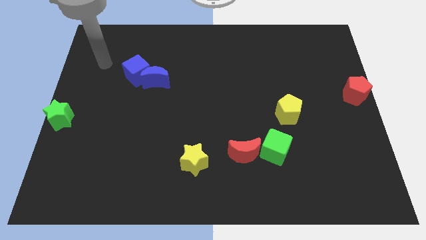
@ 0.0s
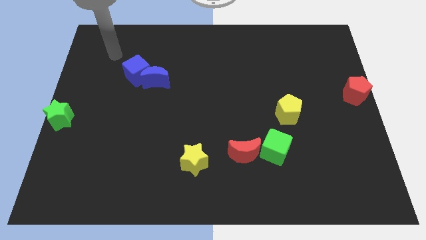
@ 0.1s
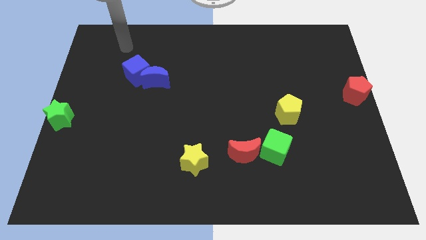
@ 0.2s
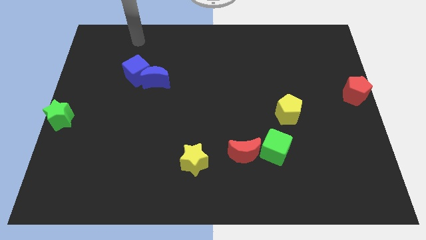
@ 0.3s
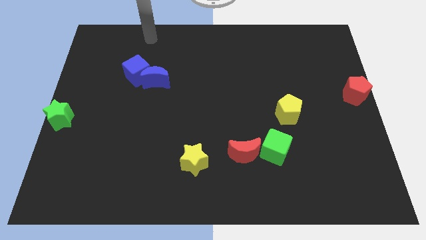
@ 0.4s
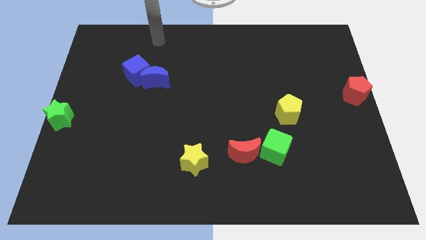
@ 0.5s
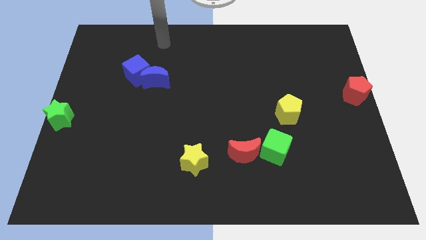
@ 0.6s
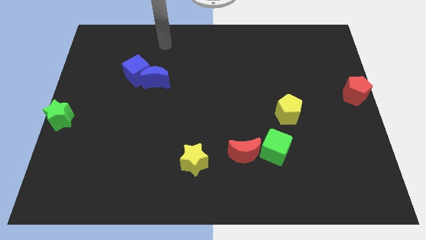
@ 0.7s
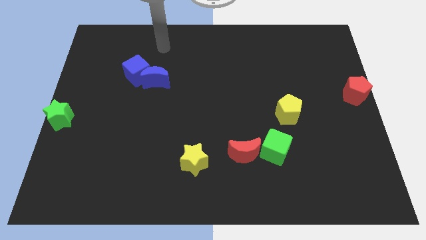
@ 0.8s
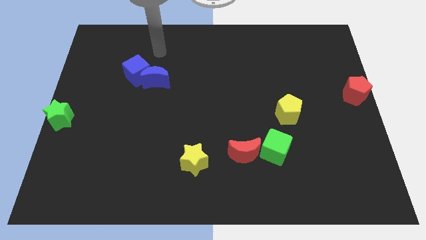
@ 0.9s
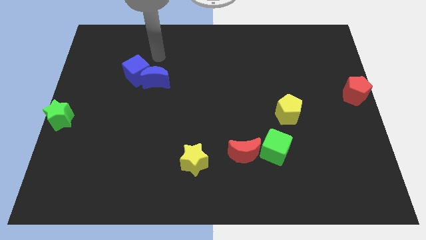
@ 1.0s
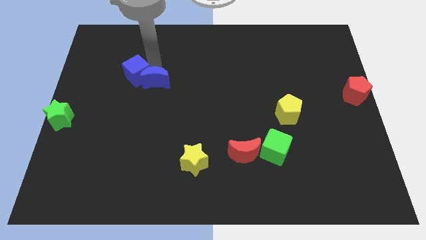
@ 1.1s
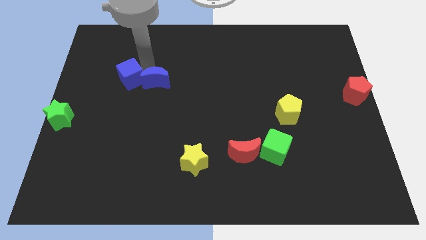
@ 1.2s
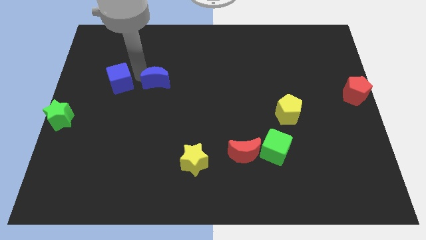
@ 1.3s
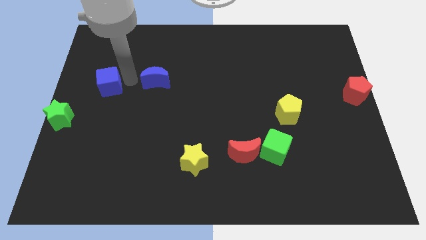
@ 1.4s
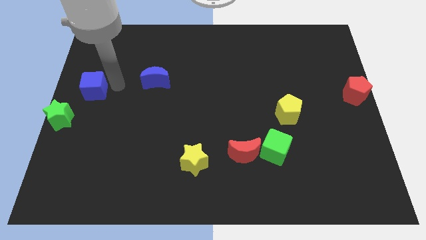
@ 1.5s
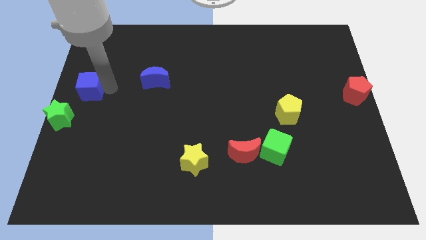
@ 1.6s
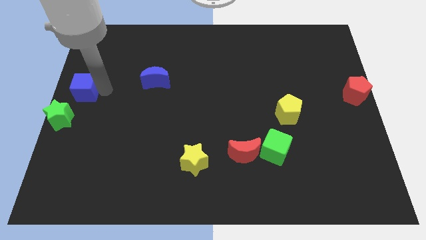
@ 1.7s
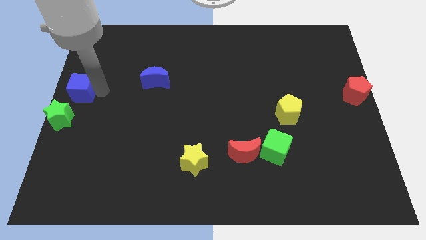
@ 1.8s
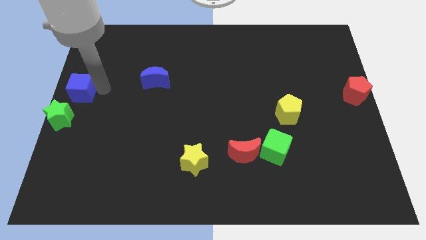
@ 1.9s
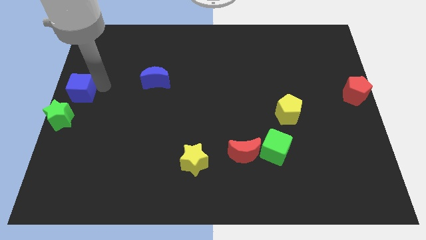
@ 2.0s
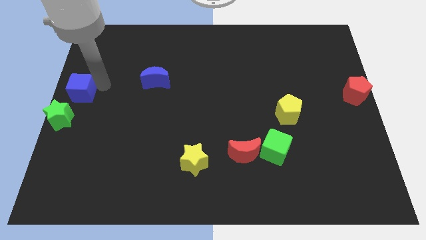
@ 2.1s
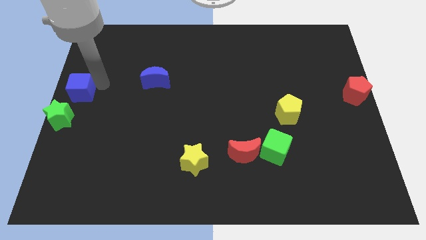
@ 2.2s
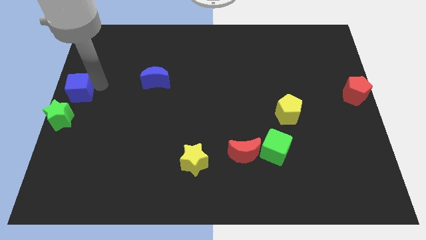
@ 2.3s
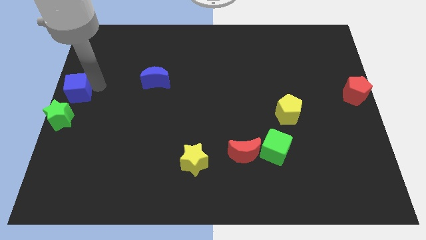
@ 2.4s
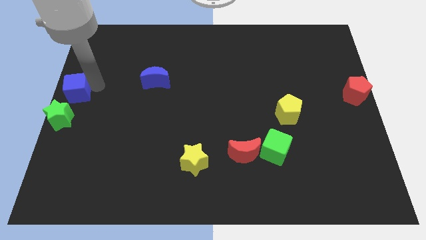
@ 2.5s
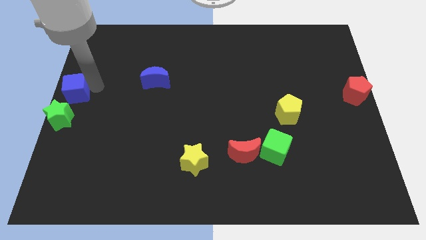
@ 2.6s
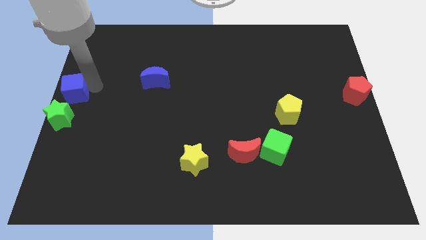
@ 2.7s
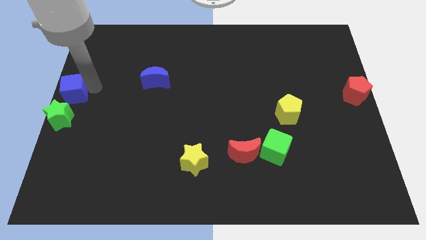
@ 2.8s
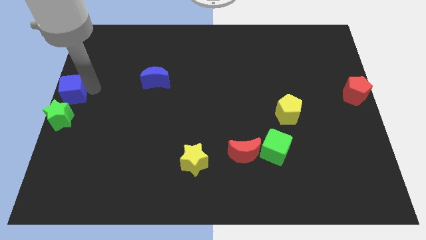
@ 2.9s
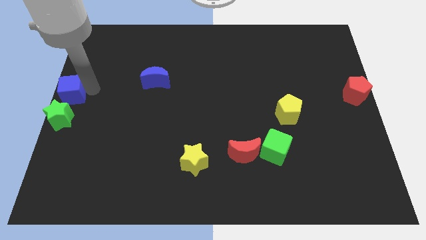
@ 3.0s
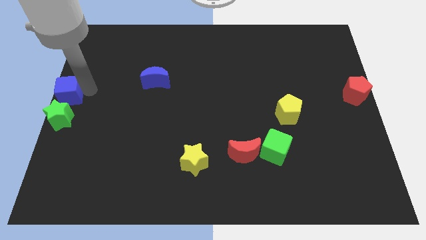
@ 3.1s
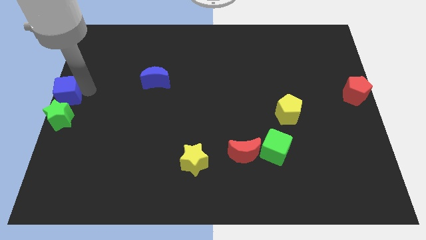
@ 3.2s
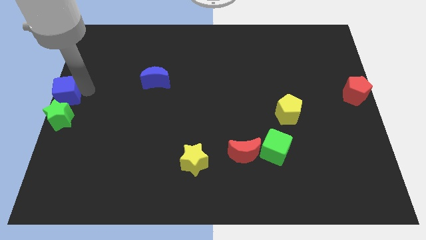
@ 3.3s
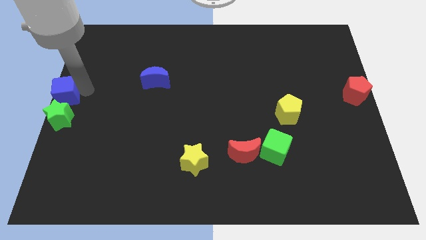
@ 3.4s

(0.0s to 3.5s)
place the blue cube above the green star

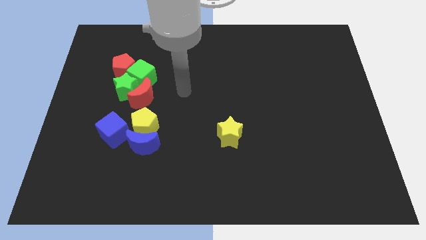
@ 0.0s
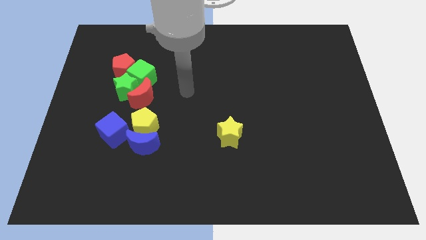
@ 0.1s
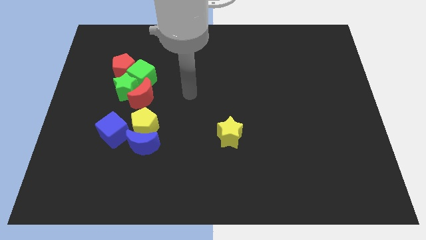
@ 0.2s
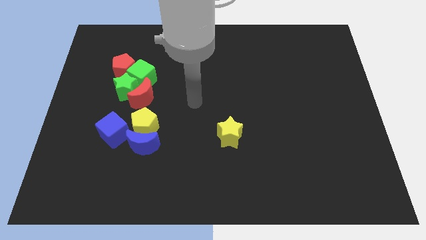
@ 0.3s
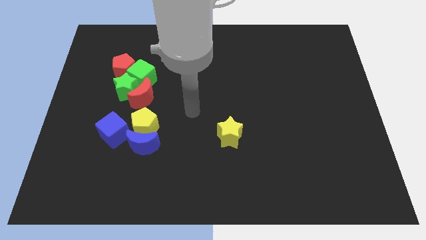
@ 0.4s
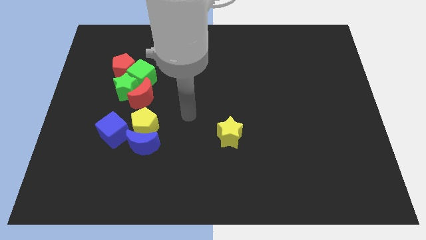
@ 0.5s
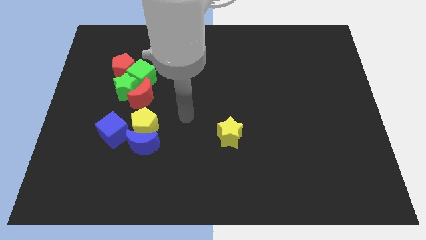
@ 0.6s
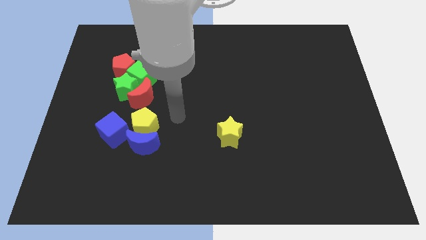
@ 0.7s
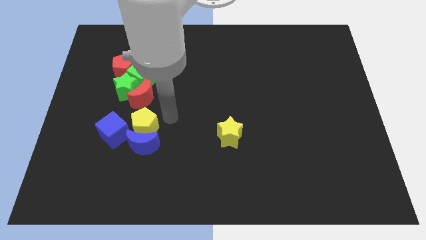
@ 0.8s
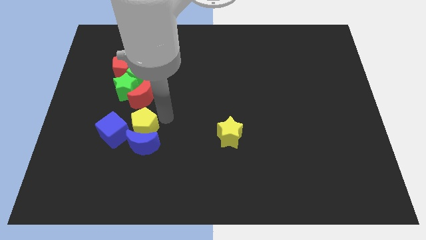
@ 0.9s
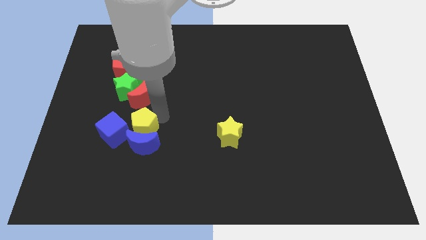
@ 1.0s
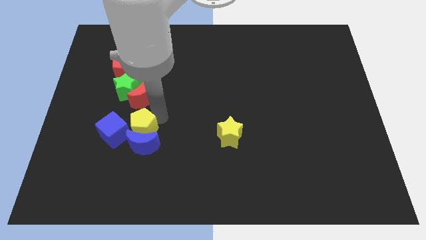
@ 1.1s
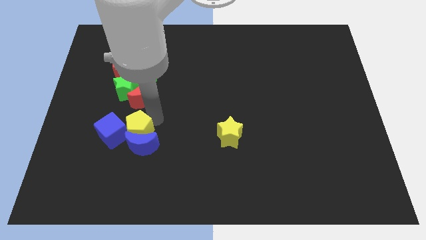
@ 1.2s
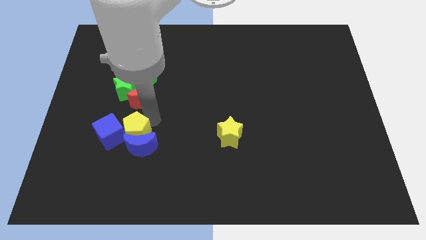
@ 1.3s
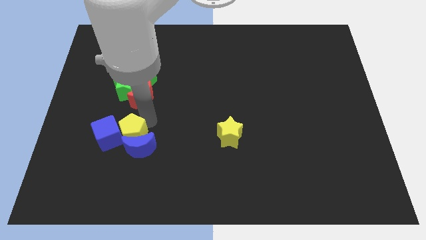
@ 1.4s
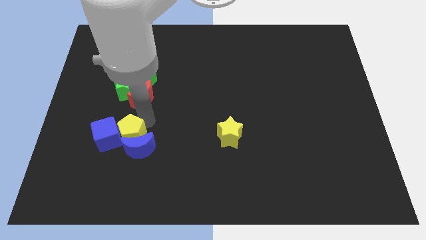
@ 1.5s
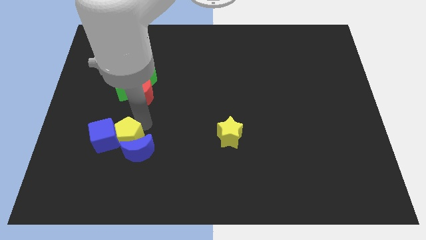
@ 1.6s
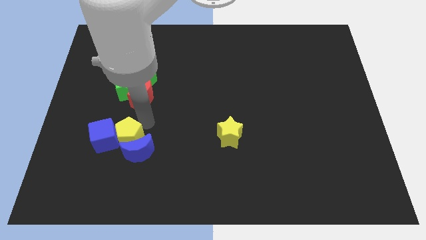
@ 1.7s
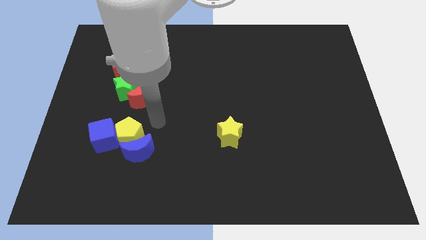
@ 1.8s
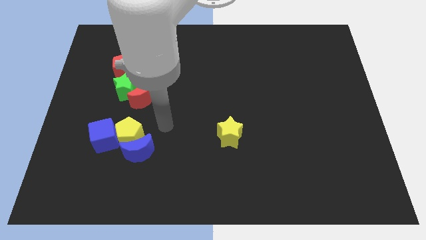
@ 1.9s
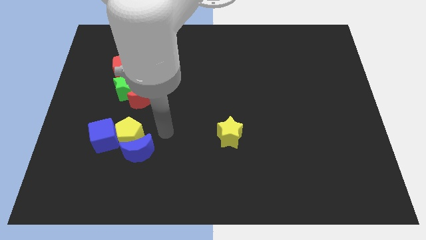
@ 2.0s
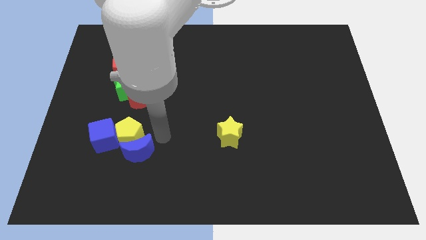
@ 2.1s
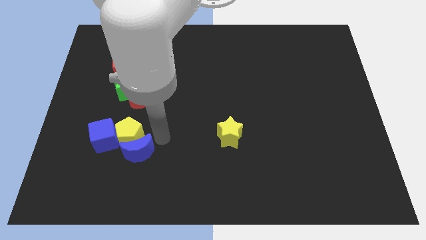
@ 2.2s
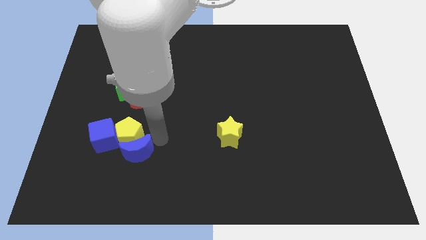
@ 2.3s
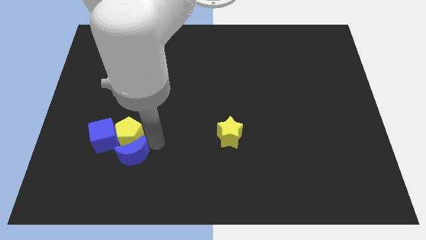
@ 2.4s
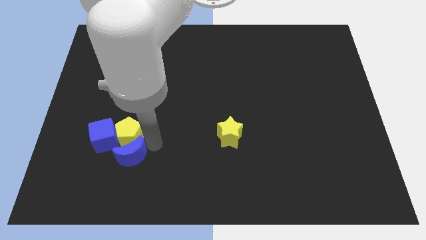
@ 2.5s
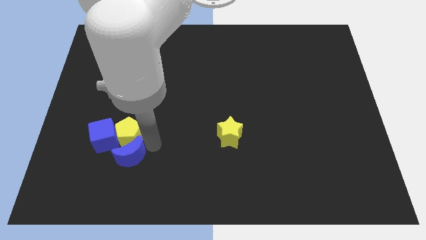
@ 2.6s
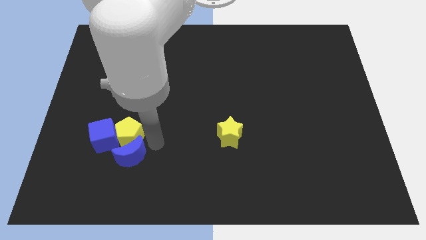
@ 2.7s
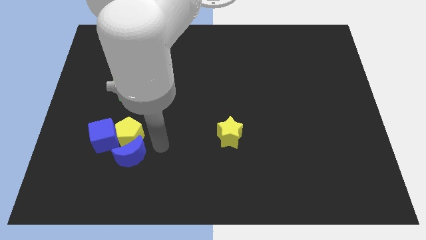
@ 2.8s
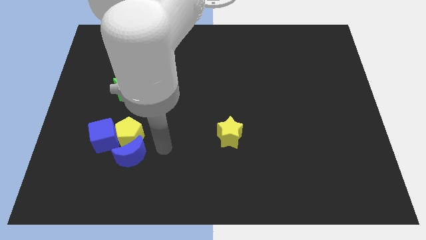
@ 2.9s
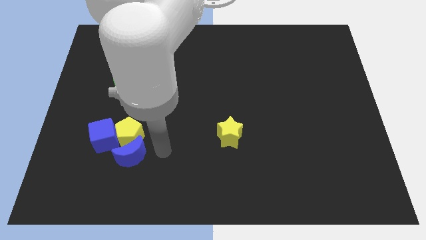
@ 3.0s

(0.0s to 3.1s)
slightly push the yellow pentagon into blue blocks

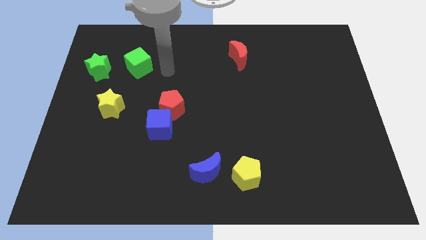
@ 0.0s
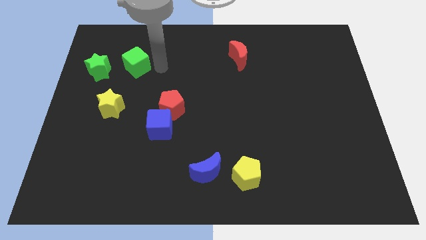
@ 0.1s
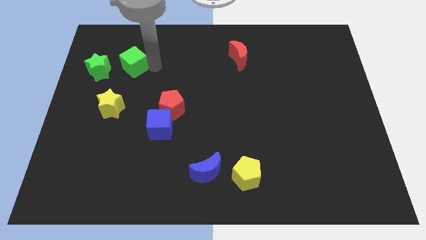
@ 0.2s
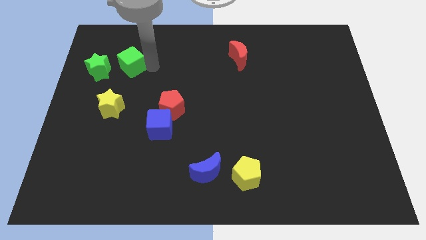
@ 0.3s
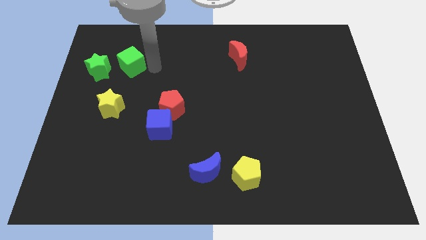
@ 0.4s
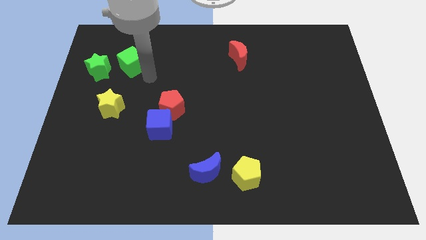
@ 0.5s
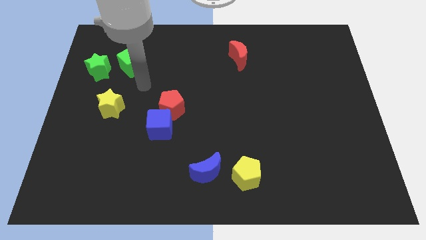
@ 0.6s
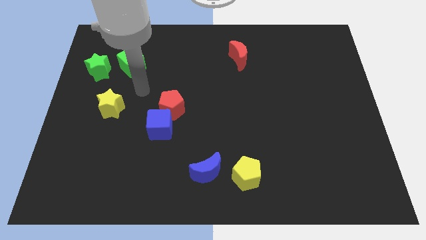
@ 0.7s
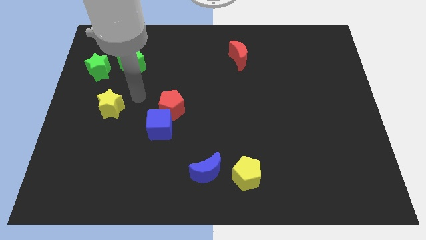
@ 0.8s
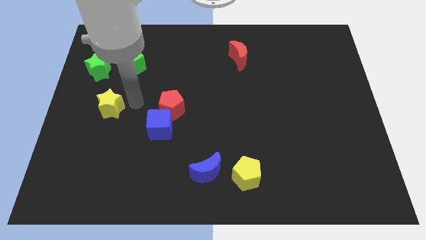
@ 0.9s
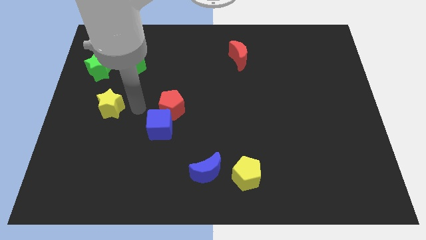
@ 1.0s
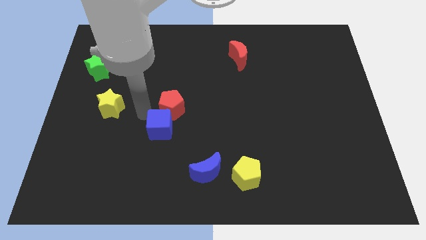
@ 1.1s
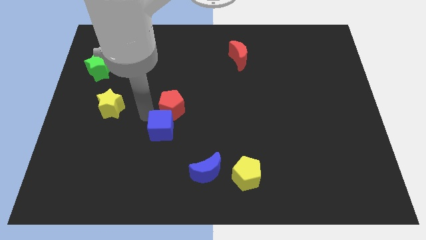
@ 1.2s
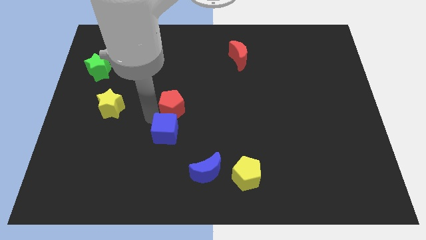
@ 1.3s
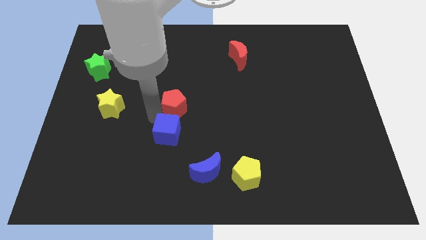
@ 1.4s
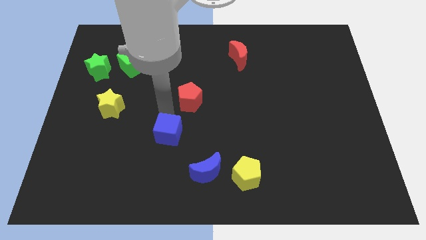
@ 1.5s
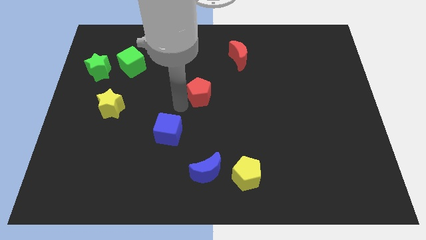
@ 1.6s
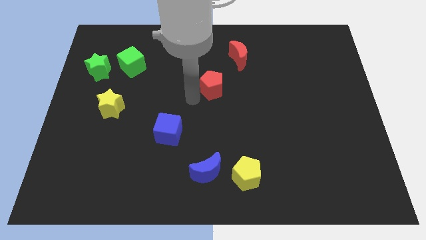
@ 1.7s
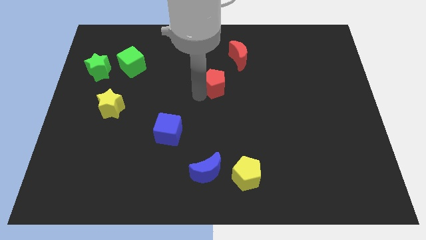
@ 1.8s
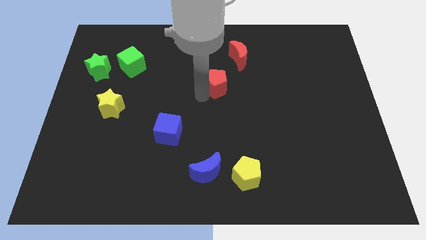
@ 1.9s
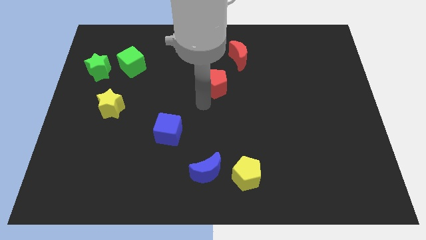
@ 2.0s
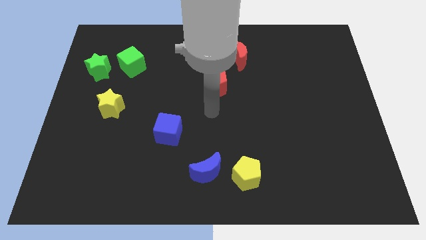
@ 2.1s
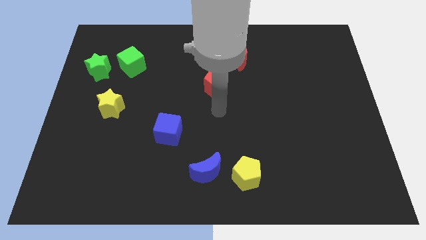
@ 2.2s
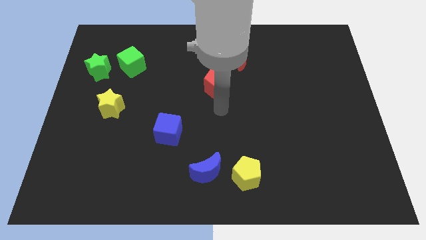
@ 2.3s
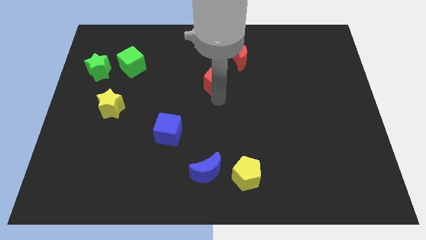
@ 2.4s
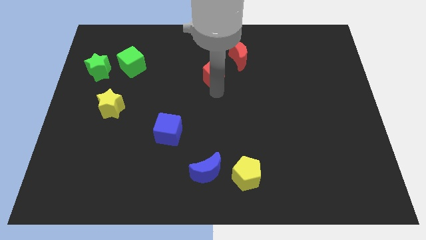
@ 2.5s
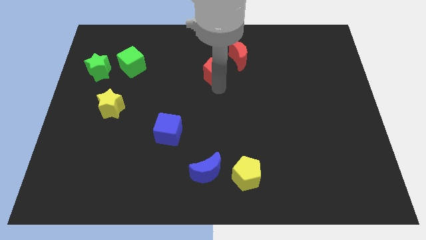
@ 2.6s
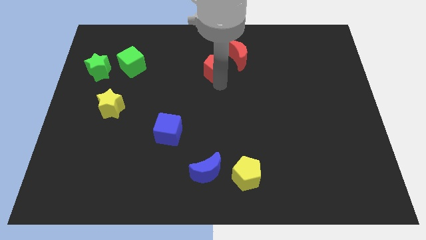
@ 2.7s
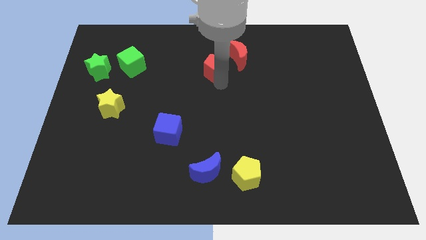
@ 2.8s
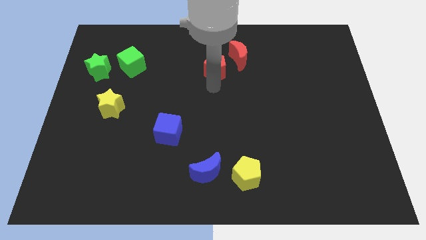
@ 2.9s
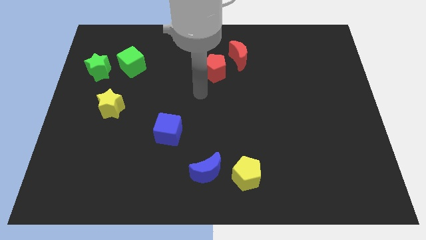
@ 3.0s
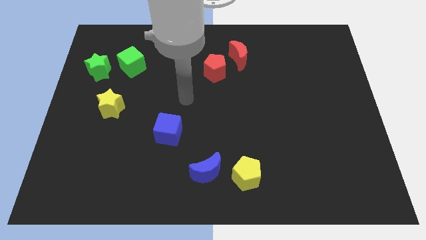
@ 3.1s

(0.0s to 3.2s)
place red pentagon close to red crescent
